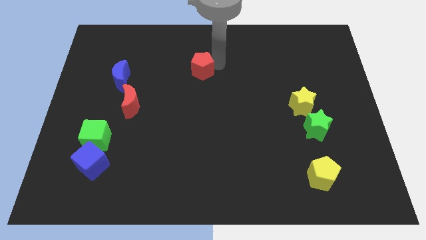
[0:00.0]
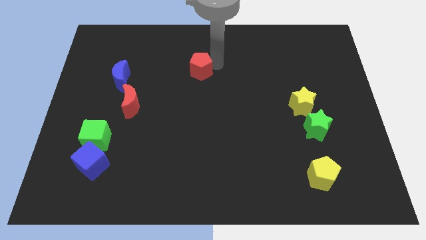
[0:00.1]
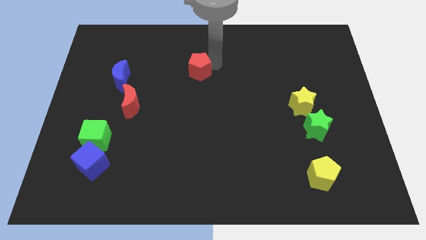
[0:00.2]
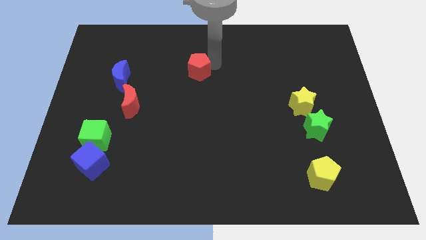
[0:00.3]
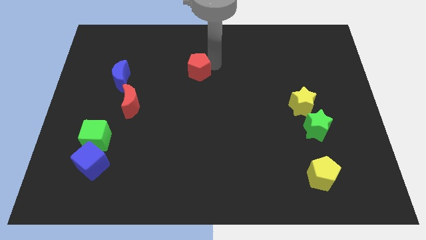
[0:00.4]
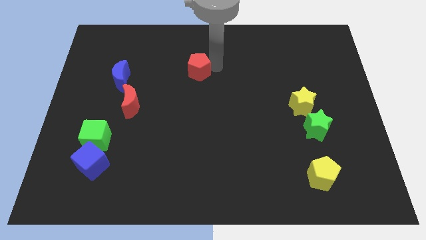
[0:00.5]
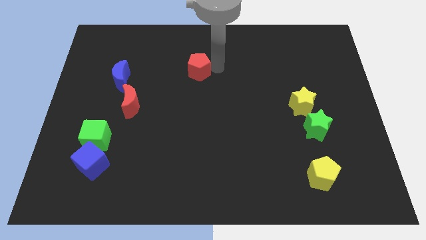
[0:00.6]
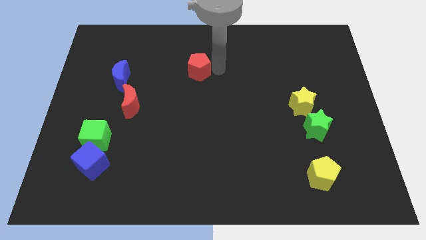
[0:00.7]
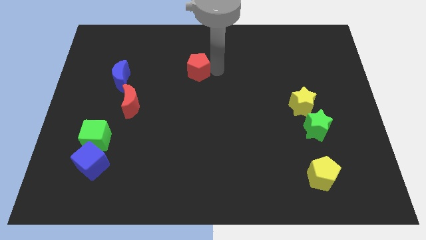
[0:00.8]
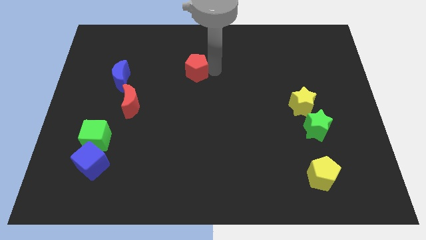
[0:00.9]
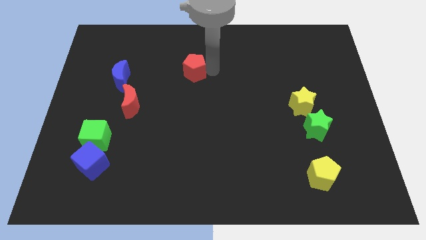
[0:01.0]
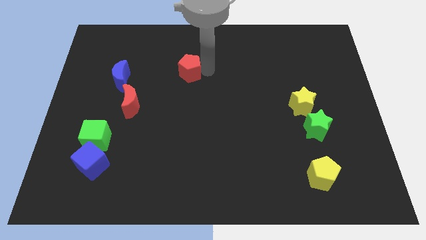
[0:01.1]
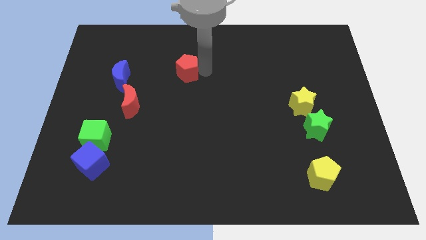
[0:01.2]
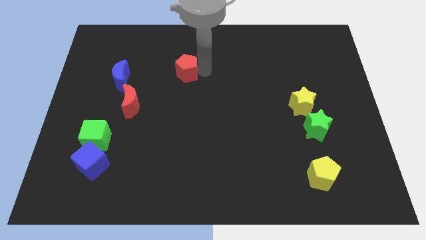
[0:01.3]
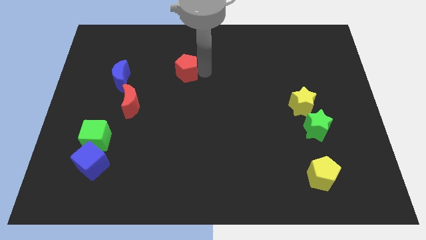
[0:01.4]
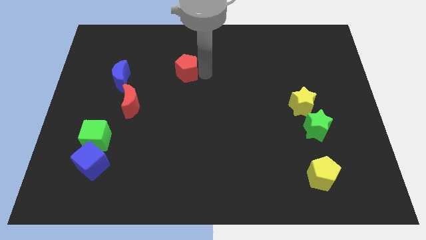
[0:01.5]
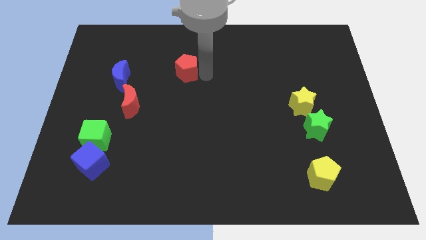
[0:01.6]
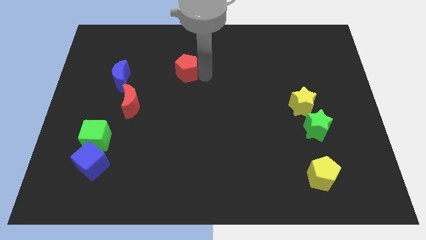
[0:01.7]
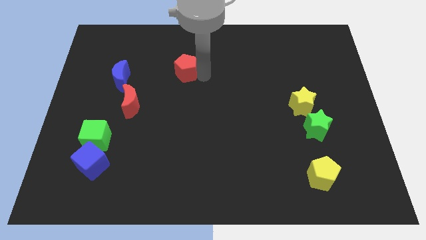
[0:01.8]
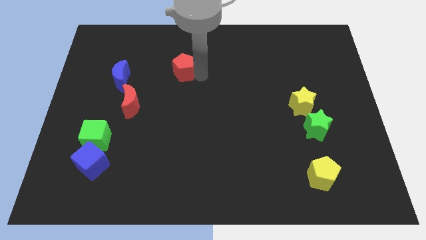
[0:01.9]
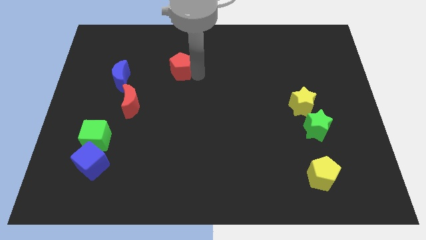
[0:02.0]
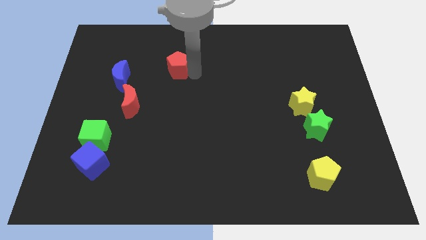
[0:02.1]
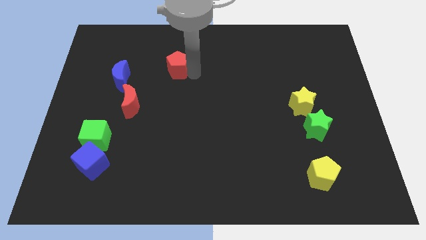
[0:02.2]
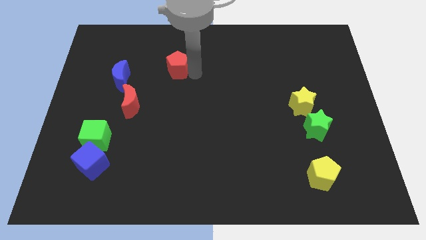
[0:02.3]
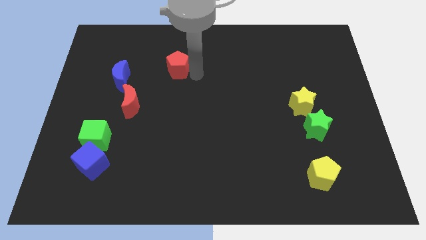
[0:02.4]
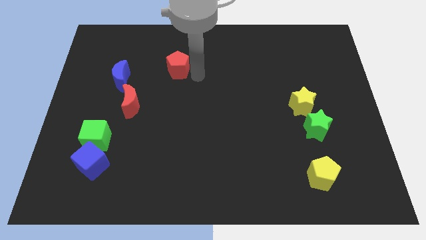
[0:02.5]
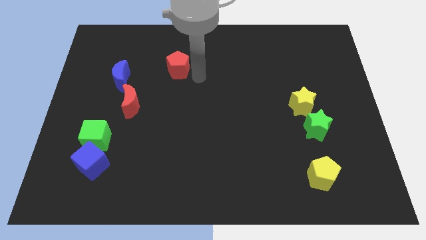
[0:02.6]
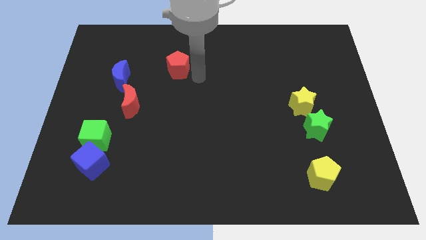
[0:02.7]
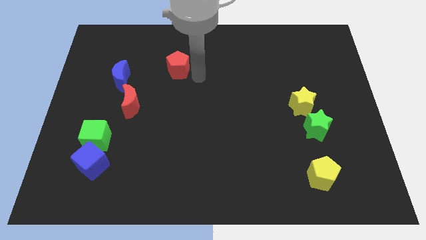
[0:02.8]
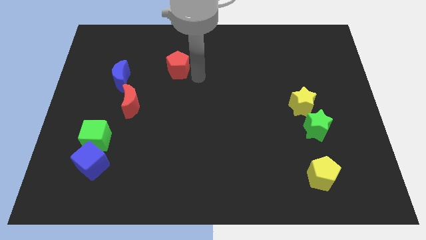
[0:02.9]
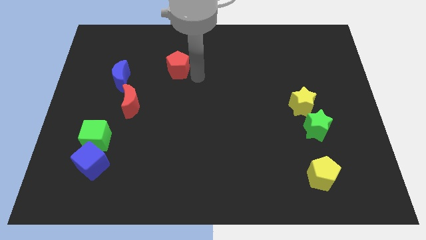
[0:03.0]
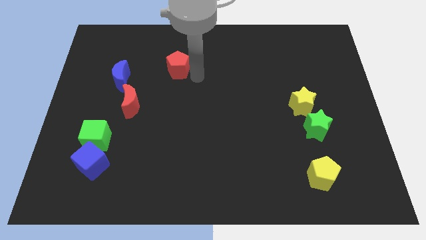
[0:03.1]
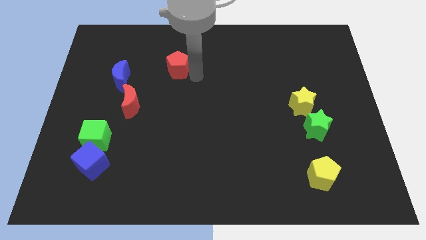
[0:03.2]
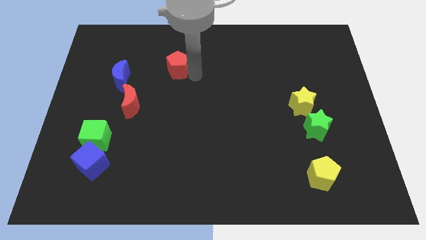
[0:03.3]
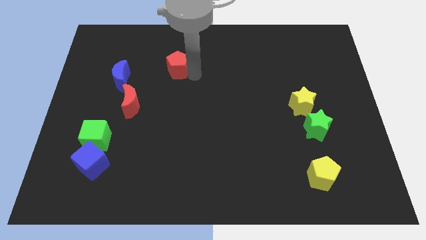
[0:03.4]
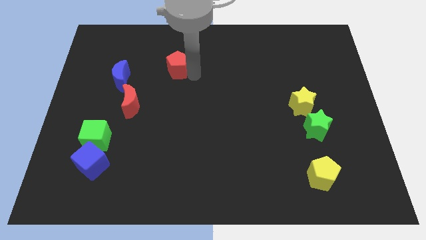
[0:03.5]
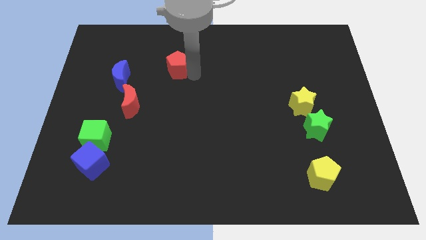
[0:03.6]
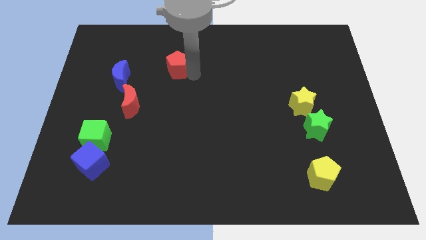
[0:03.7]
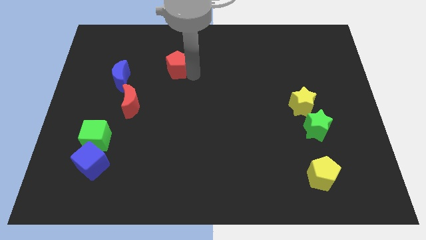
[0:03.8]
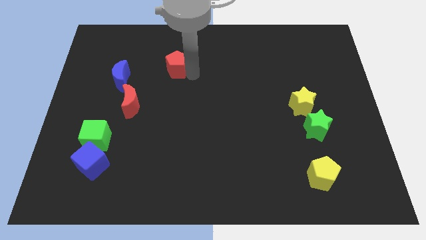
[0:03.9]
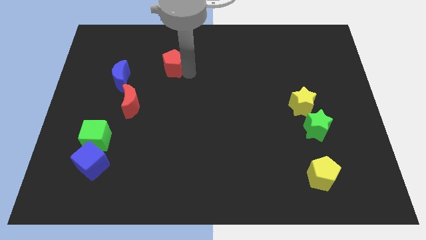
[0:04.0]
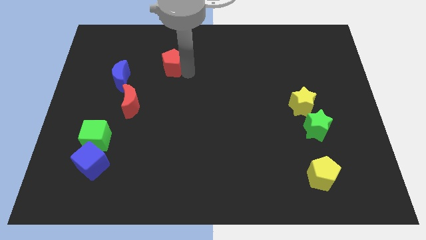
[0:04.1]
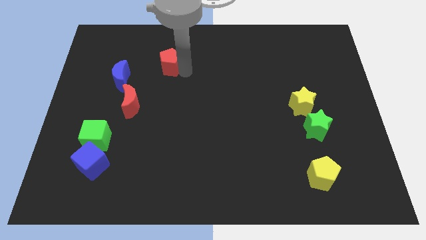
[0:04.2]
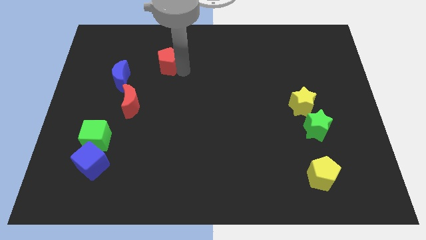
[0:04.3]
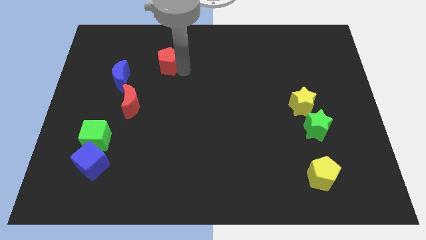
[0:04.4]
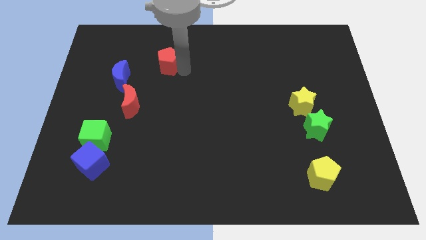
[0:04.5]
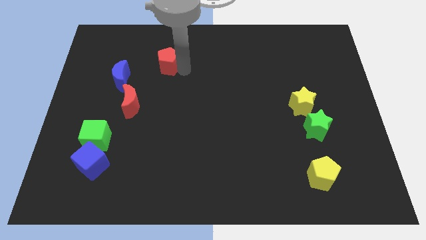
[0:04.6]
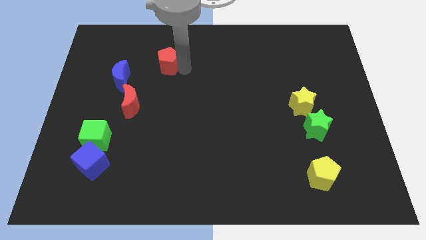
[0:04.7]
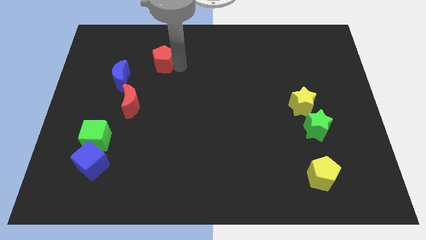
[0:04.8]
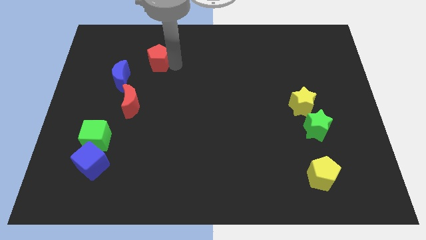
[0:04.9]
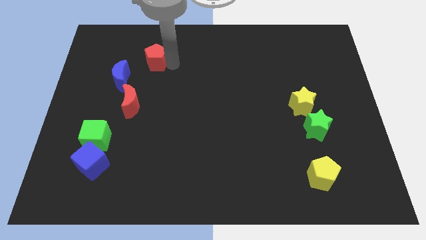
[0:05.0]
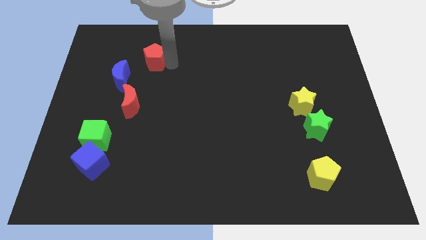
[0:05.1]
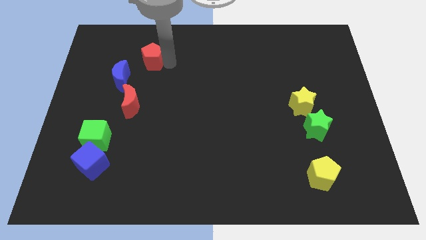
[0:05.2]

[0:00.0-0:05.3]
push the red pentagon on the top right of the blue crescent

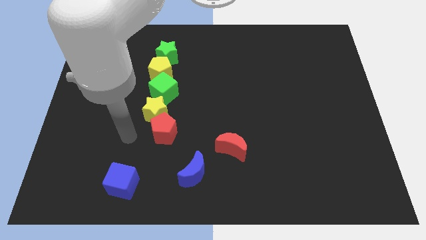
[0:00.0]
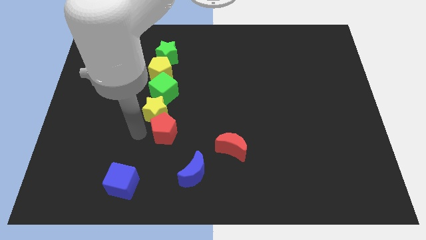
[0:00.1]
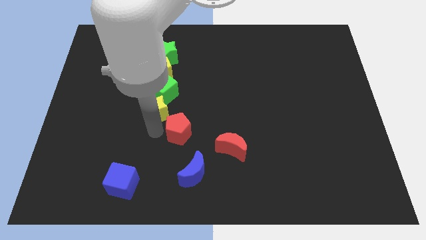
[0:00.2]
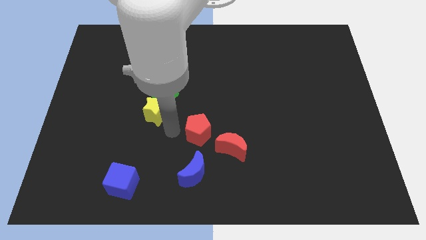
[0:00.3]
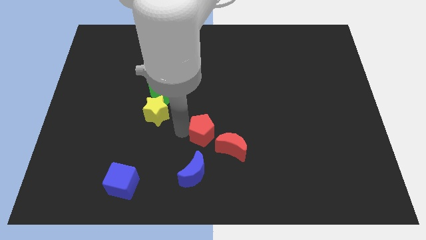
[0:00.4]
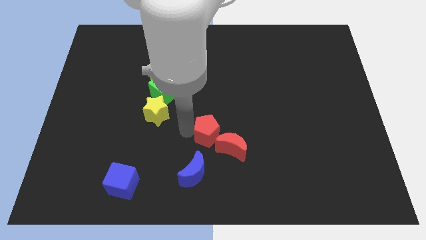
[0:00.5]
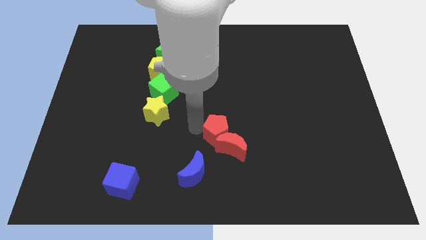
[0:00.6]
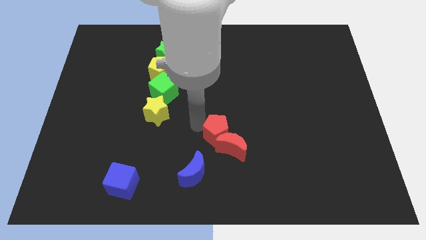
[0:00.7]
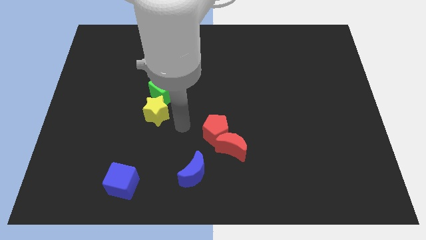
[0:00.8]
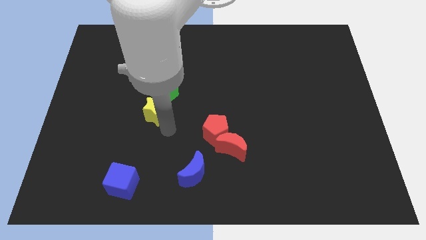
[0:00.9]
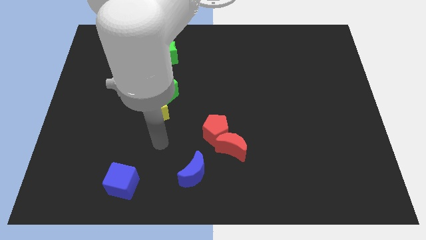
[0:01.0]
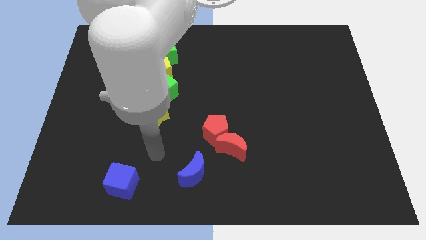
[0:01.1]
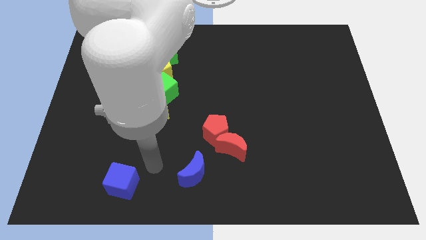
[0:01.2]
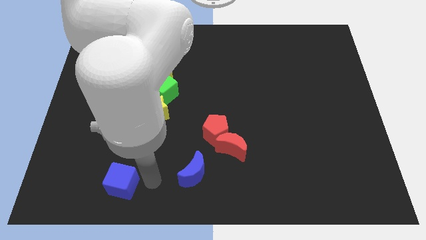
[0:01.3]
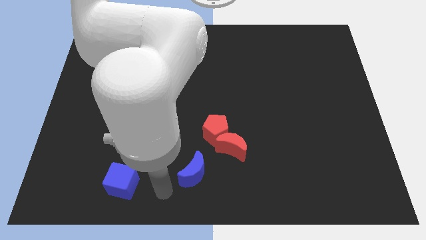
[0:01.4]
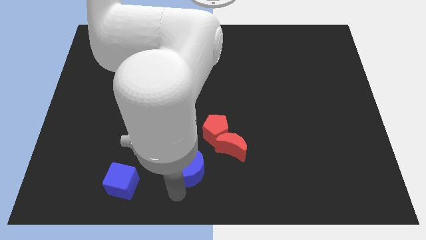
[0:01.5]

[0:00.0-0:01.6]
separate red pentagon from the yellow star

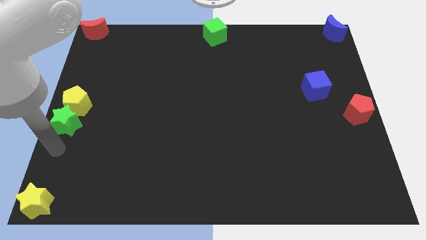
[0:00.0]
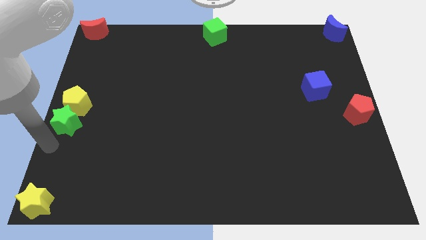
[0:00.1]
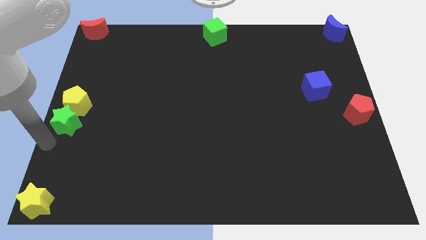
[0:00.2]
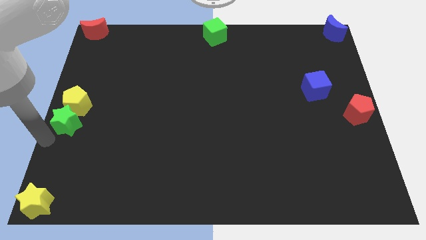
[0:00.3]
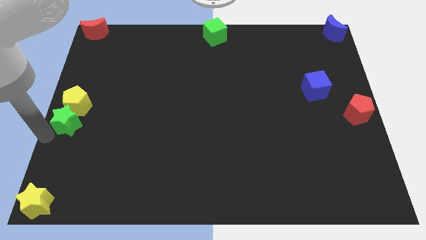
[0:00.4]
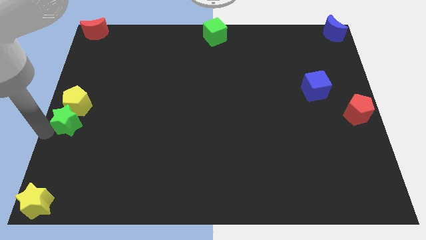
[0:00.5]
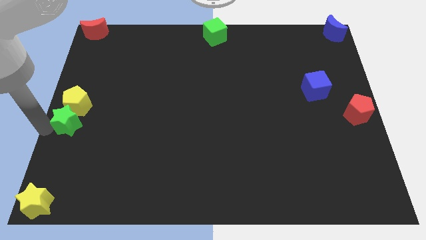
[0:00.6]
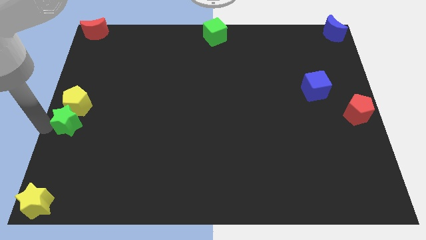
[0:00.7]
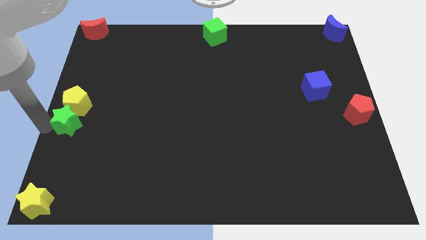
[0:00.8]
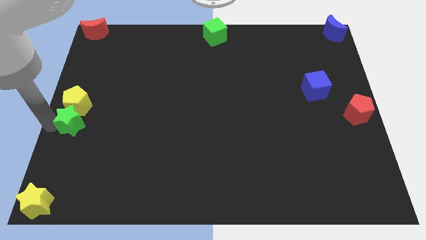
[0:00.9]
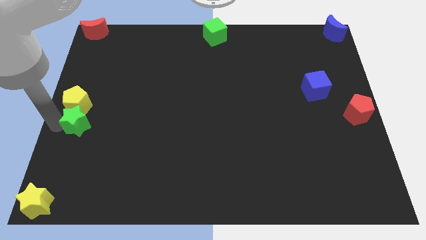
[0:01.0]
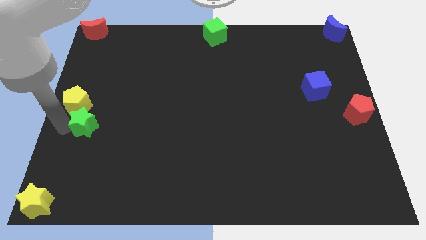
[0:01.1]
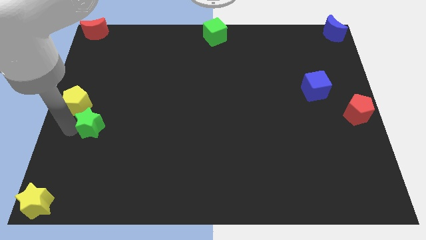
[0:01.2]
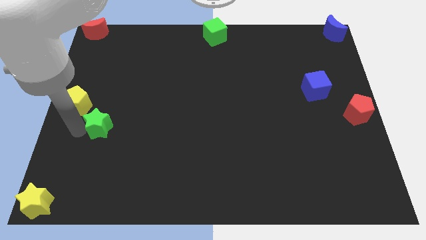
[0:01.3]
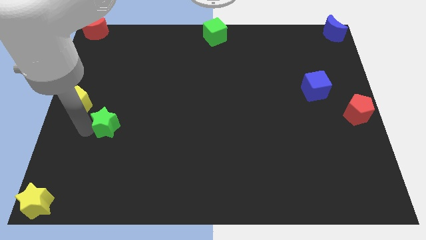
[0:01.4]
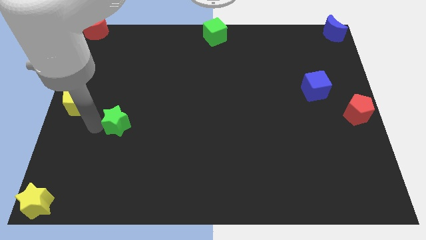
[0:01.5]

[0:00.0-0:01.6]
separate the green star from yellow pentagon

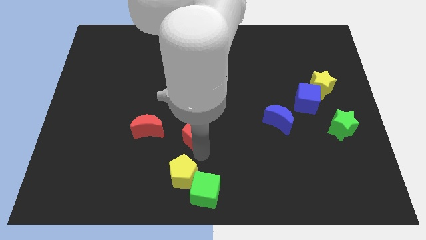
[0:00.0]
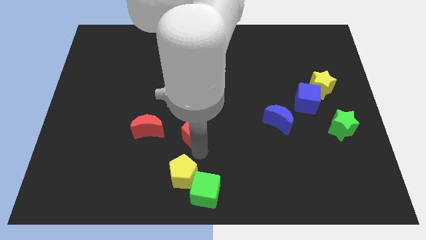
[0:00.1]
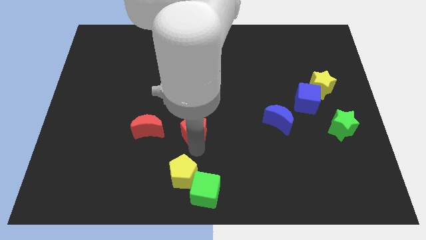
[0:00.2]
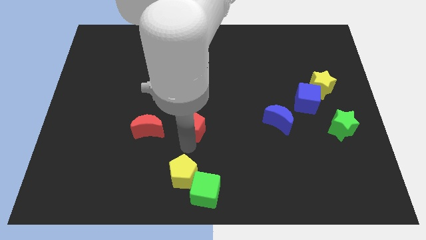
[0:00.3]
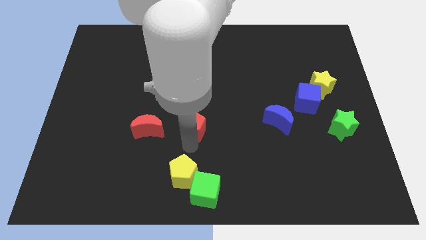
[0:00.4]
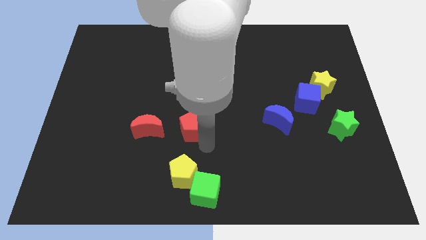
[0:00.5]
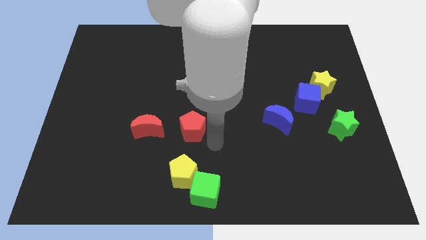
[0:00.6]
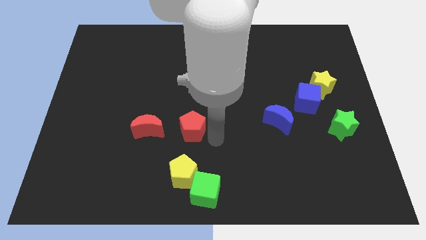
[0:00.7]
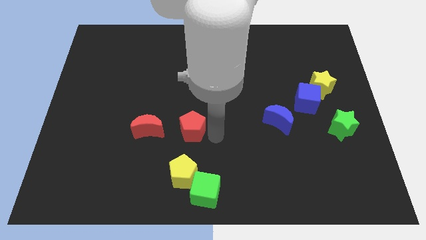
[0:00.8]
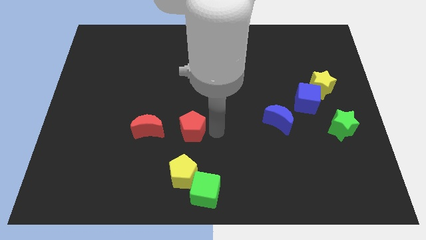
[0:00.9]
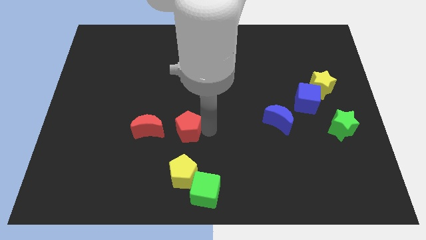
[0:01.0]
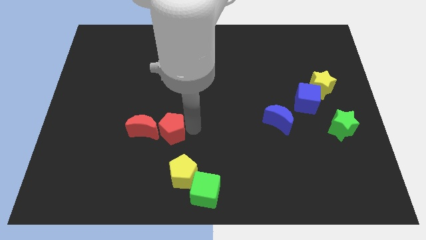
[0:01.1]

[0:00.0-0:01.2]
place the red pentagon parallel to red crescent
